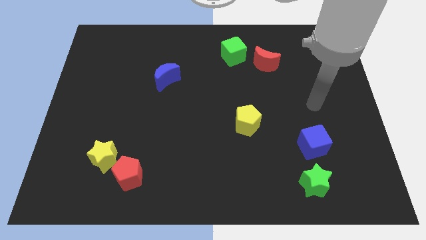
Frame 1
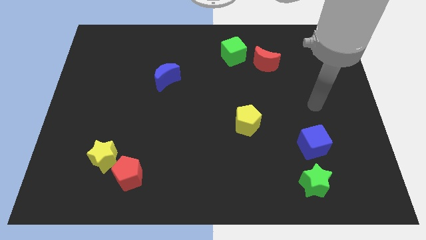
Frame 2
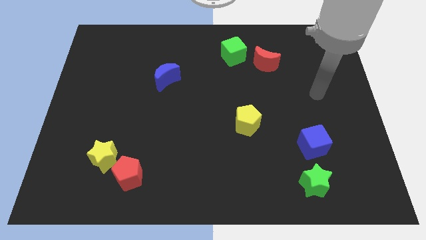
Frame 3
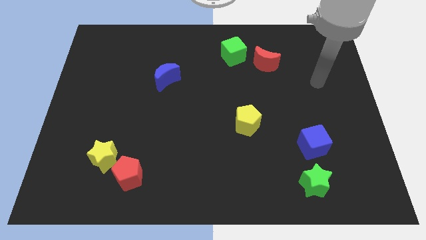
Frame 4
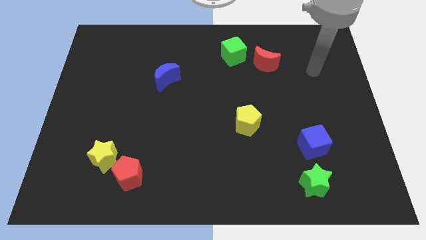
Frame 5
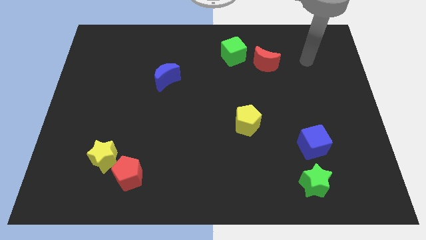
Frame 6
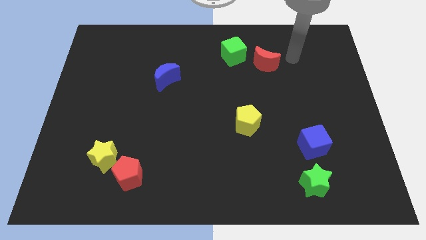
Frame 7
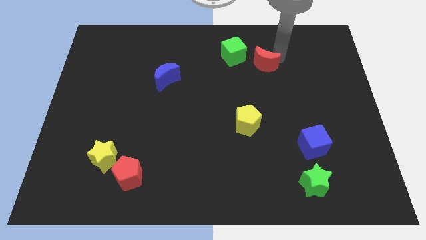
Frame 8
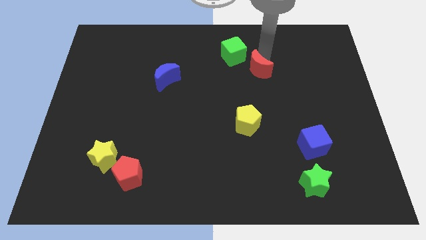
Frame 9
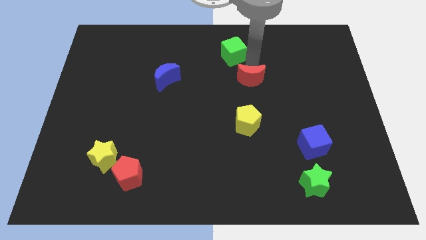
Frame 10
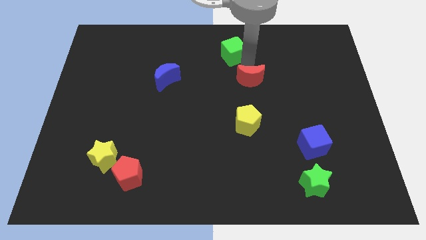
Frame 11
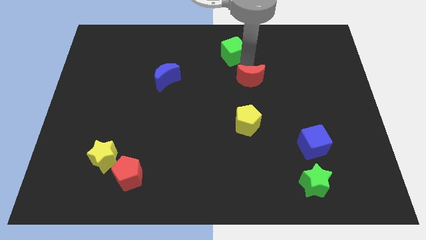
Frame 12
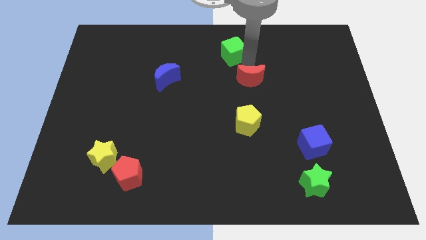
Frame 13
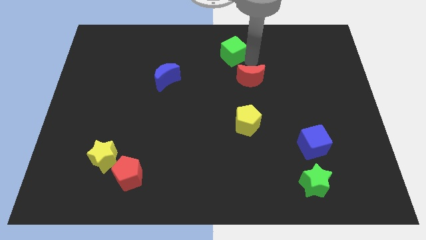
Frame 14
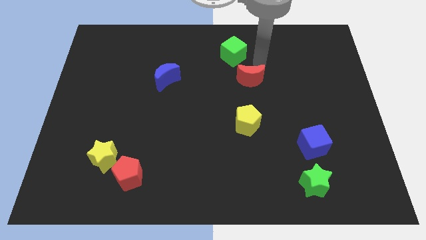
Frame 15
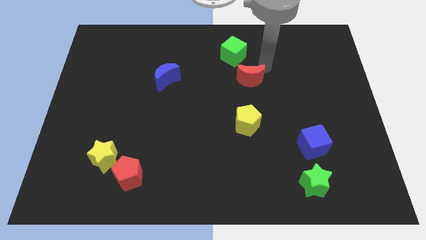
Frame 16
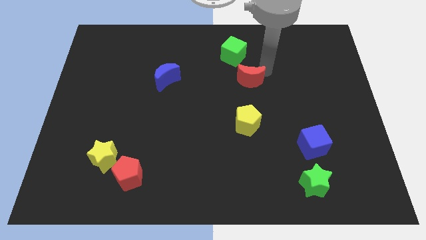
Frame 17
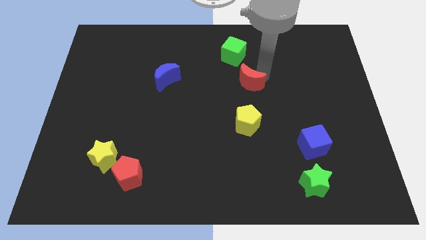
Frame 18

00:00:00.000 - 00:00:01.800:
place the red moon parallel to the blue crescent

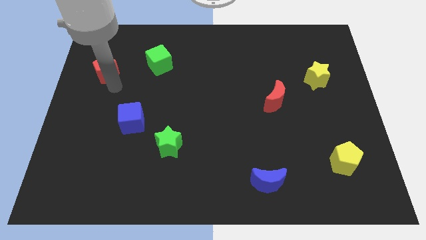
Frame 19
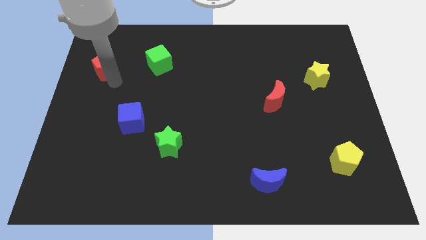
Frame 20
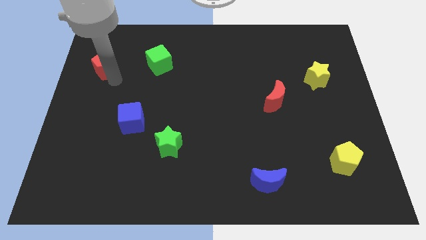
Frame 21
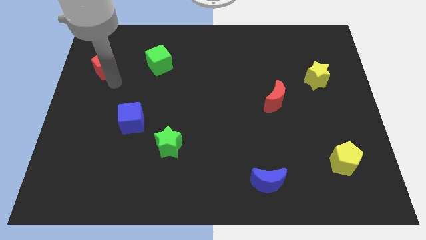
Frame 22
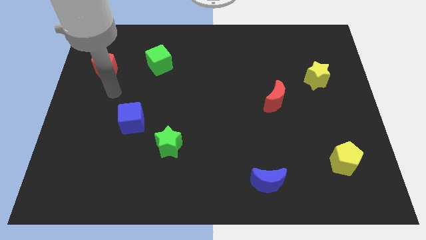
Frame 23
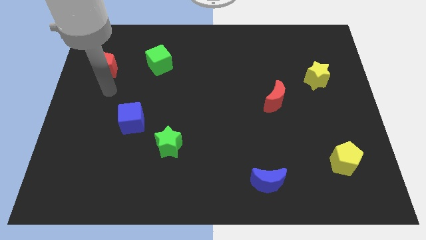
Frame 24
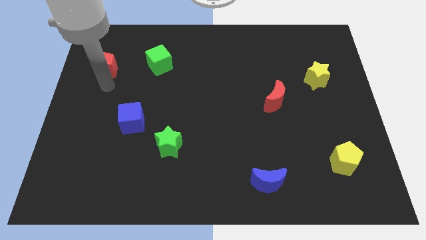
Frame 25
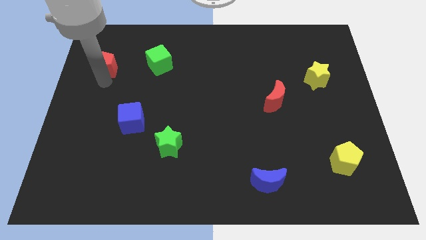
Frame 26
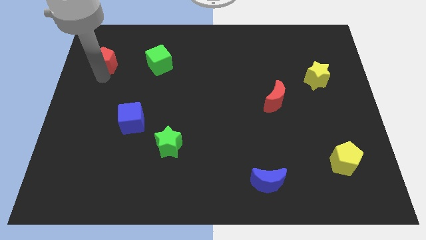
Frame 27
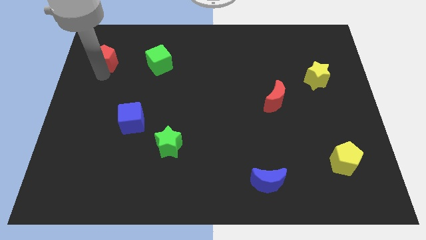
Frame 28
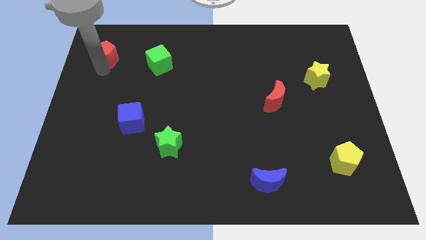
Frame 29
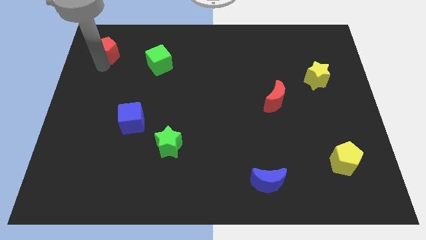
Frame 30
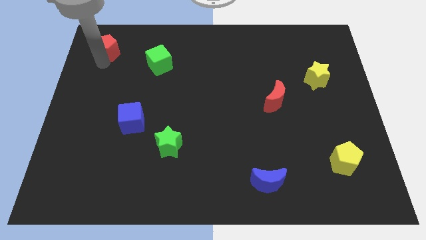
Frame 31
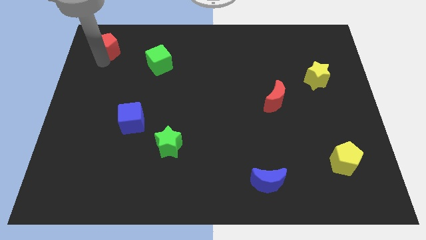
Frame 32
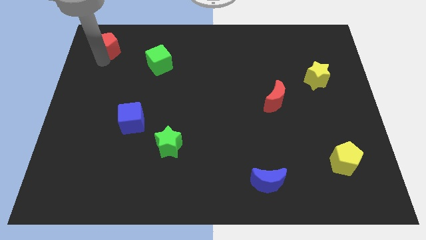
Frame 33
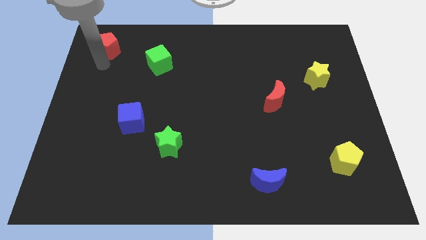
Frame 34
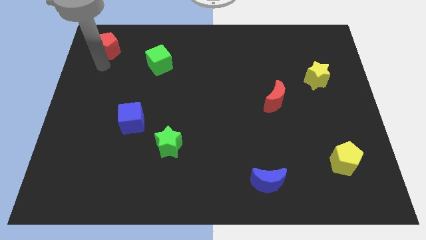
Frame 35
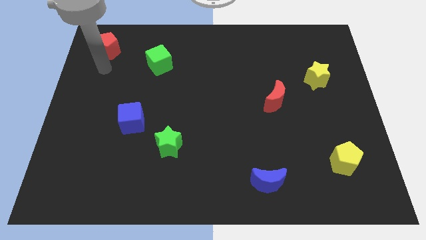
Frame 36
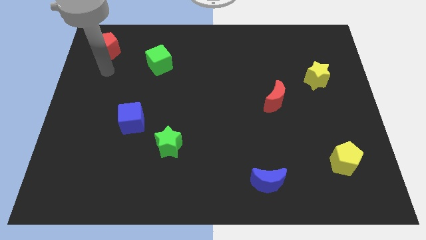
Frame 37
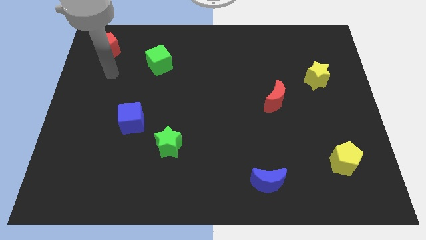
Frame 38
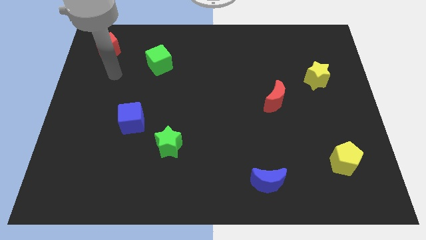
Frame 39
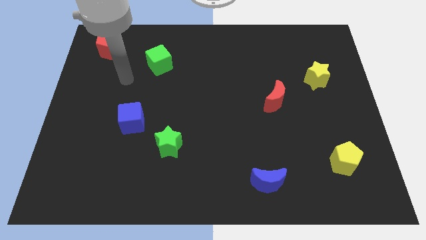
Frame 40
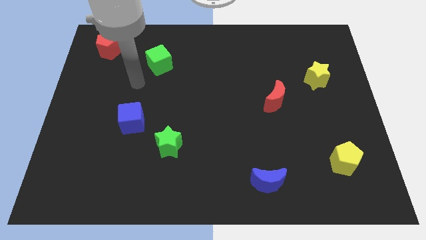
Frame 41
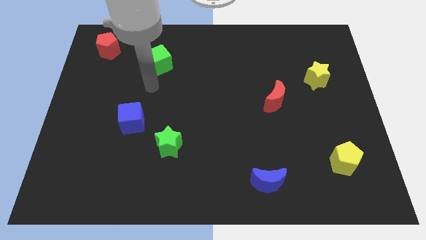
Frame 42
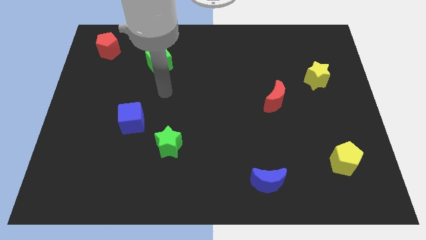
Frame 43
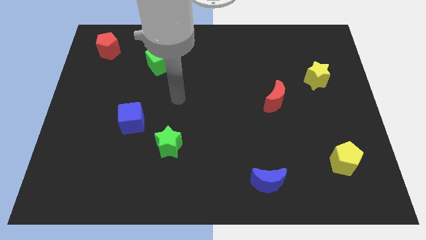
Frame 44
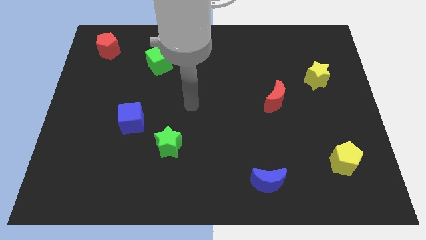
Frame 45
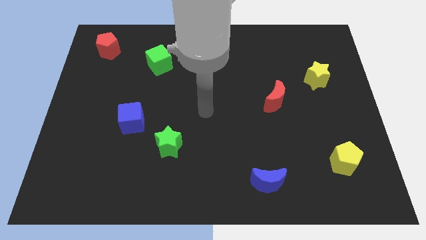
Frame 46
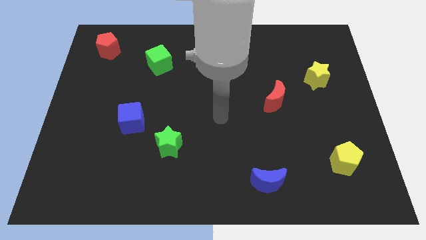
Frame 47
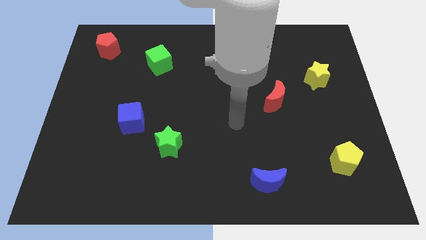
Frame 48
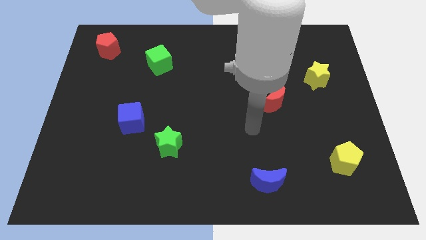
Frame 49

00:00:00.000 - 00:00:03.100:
push red pentagon towards top left

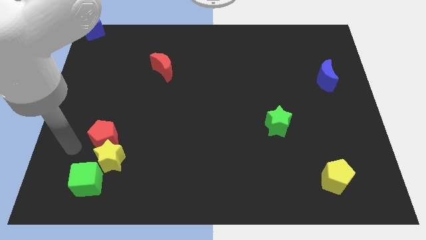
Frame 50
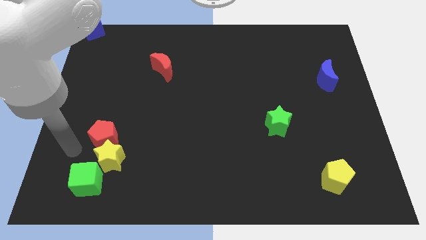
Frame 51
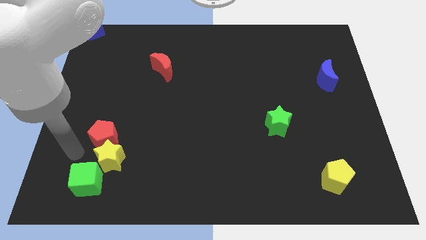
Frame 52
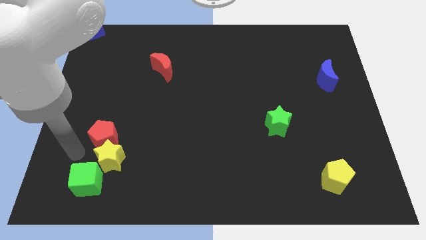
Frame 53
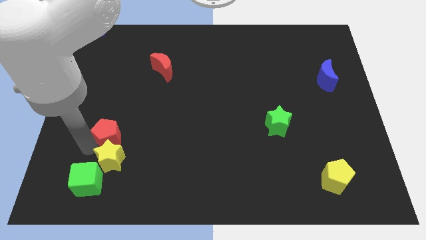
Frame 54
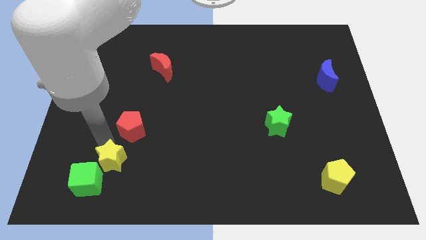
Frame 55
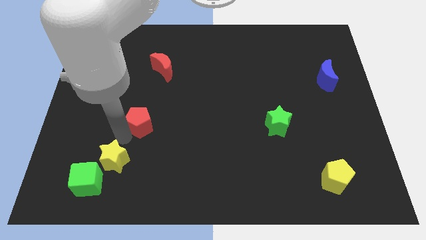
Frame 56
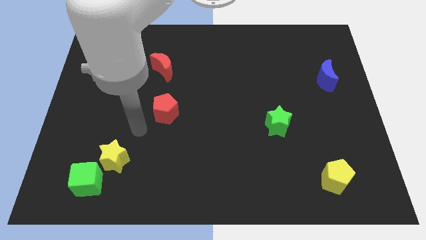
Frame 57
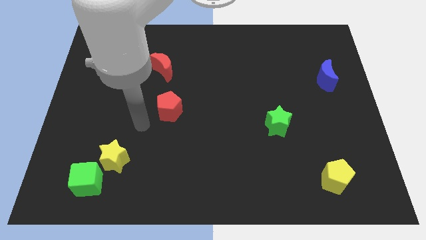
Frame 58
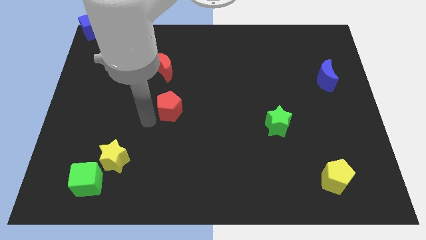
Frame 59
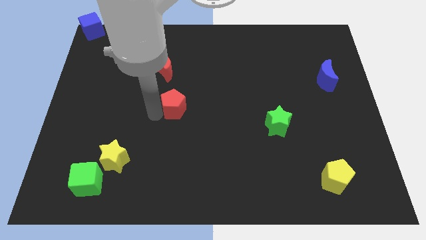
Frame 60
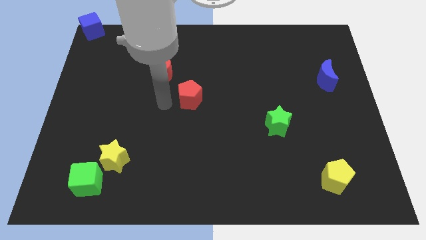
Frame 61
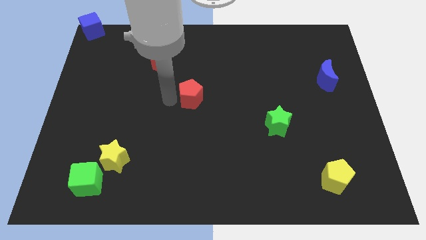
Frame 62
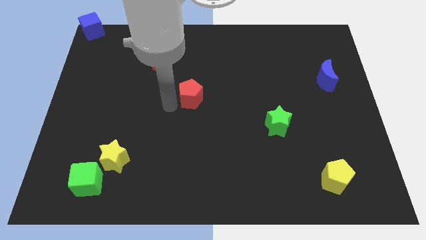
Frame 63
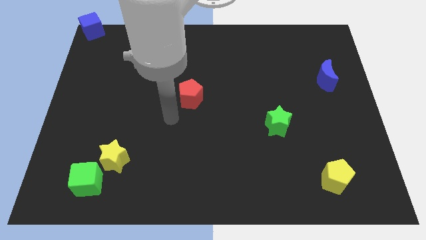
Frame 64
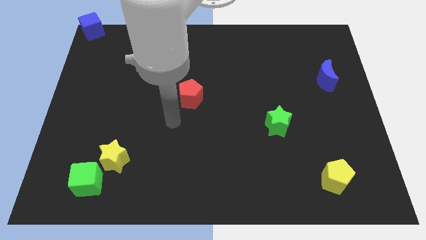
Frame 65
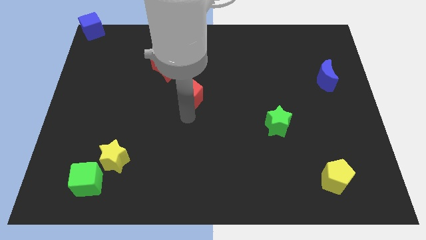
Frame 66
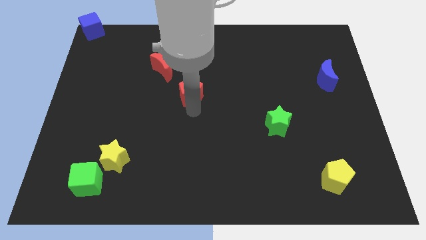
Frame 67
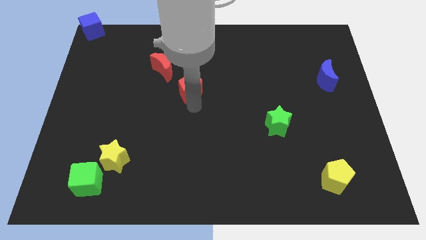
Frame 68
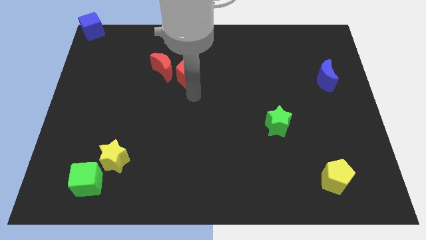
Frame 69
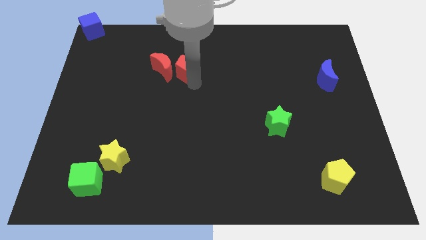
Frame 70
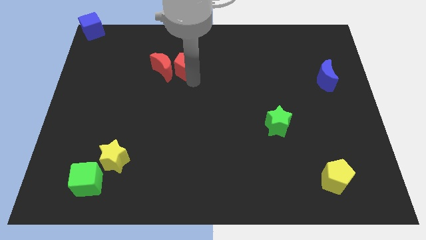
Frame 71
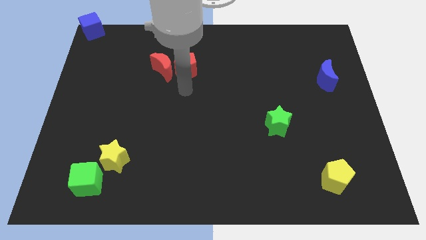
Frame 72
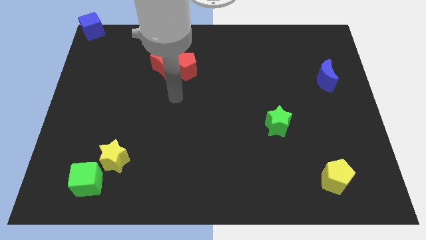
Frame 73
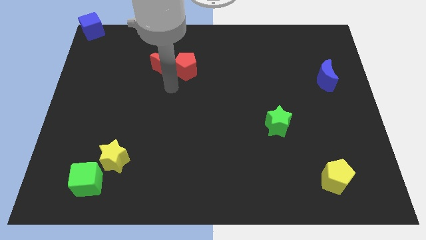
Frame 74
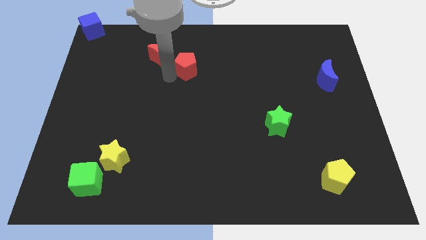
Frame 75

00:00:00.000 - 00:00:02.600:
move the red penatgon close to the red moon

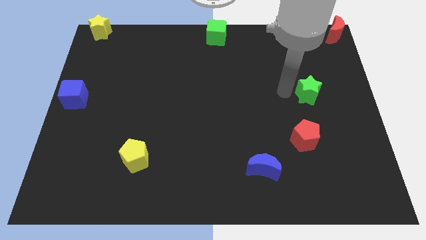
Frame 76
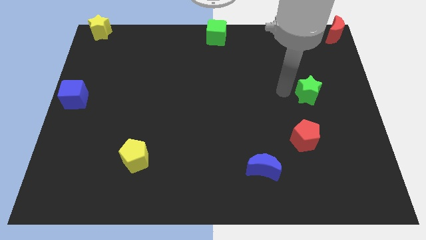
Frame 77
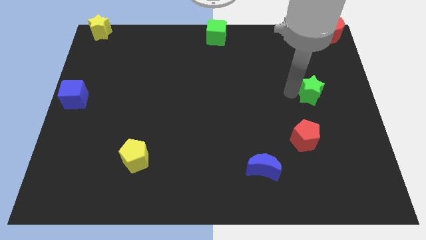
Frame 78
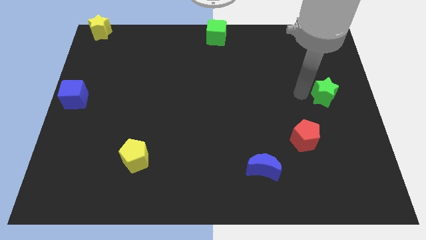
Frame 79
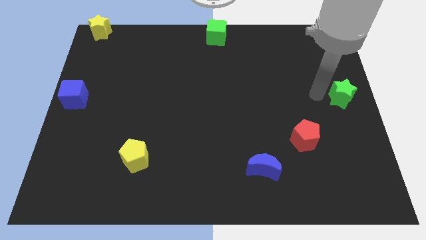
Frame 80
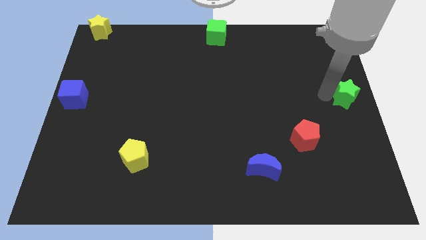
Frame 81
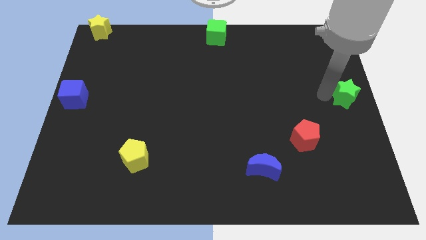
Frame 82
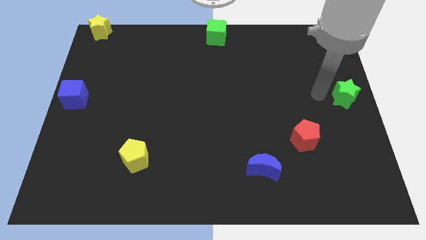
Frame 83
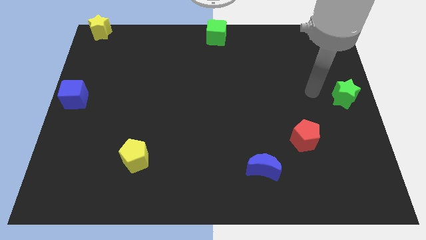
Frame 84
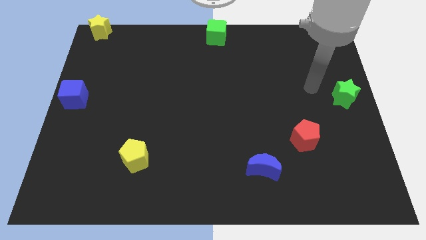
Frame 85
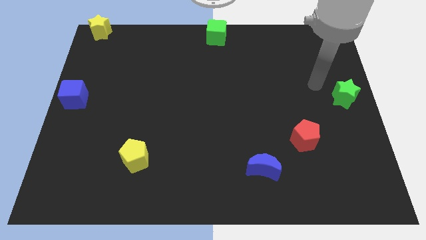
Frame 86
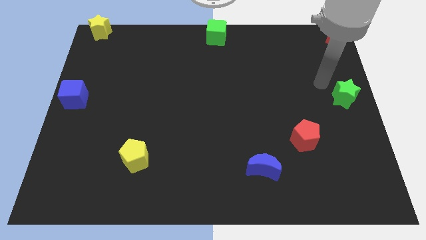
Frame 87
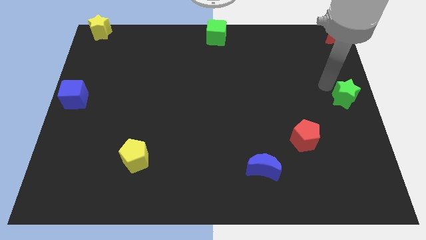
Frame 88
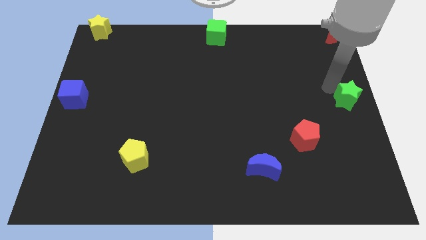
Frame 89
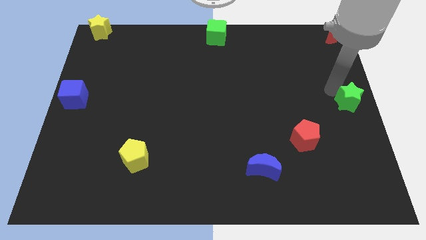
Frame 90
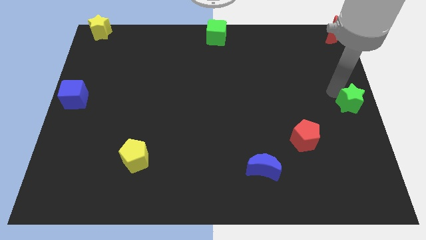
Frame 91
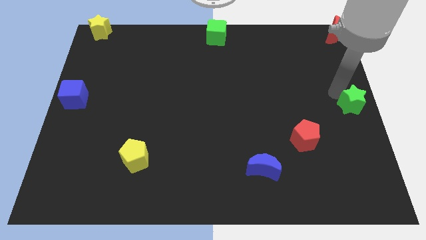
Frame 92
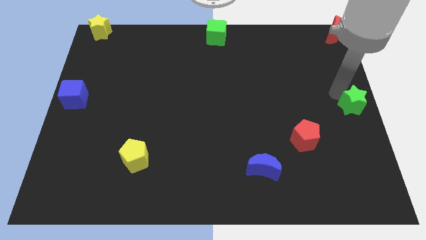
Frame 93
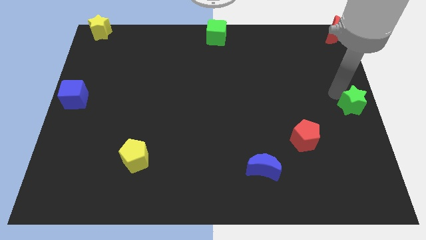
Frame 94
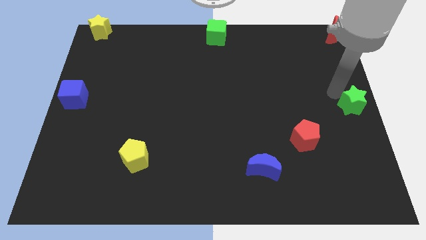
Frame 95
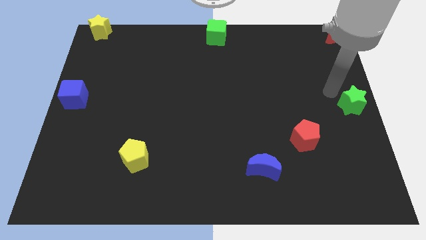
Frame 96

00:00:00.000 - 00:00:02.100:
push the green star to the center right of the board
